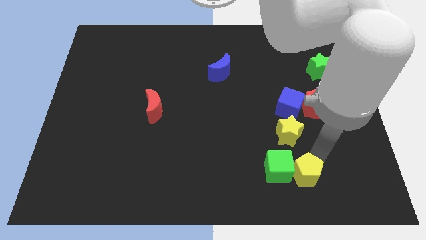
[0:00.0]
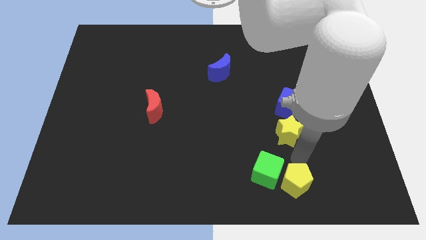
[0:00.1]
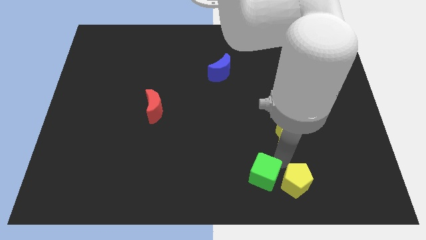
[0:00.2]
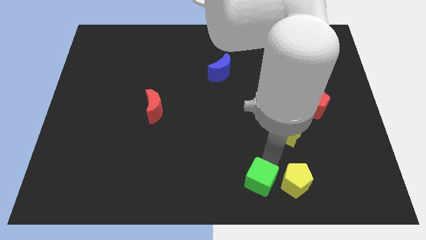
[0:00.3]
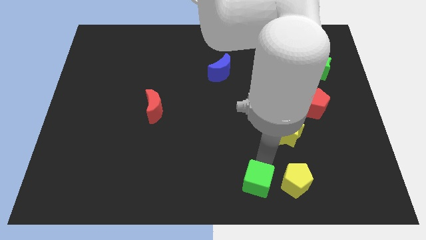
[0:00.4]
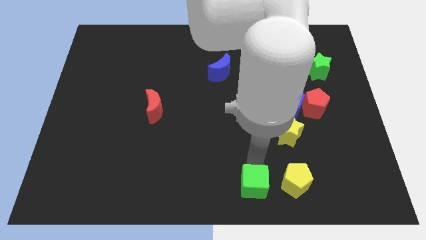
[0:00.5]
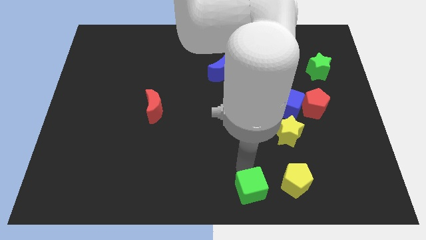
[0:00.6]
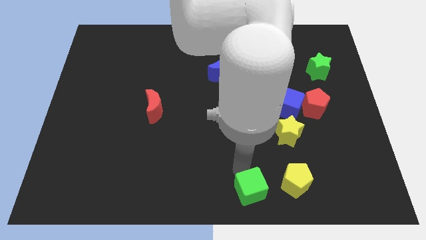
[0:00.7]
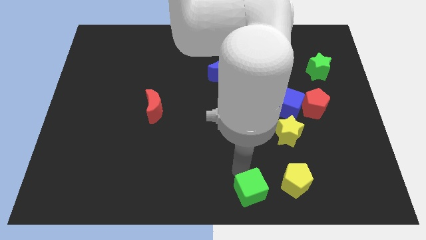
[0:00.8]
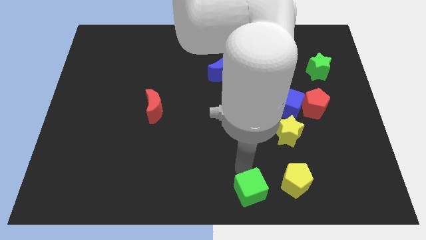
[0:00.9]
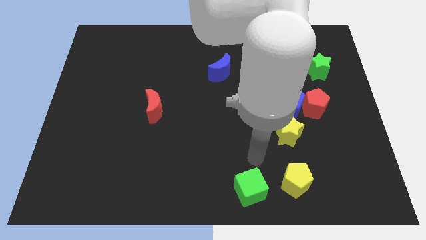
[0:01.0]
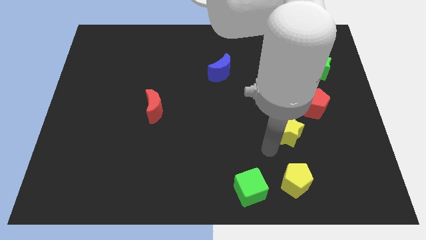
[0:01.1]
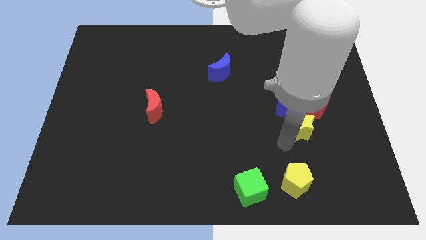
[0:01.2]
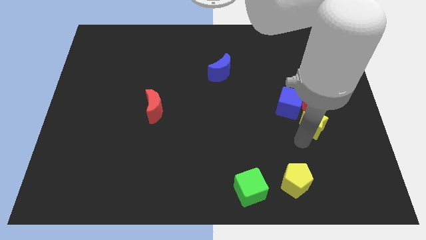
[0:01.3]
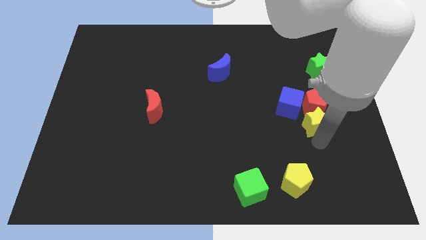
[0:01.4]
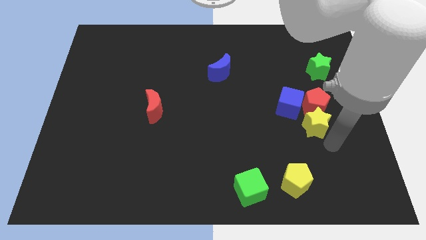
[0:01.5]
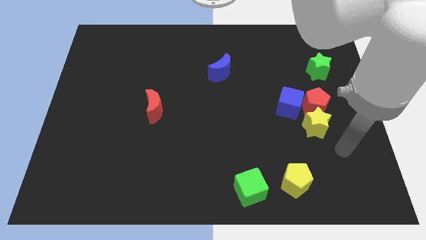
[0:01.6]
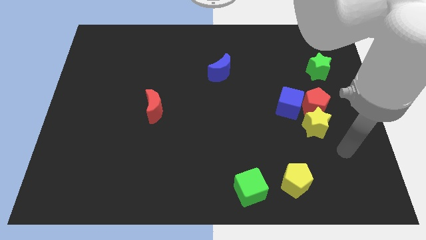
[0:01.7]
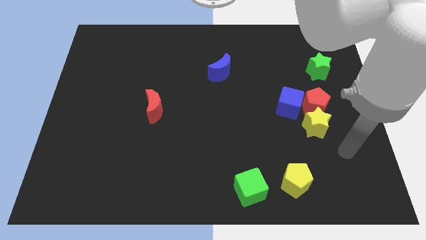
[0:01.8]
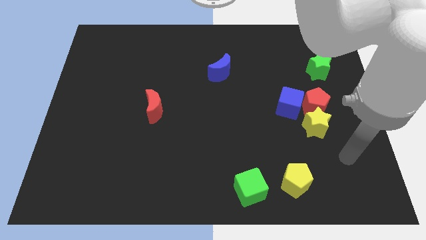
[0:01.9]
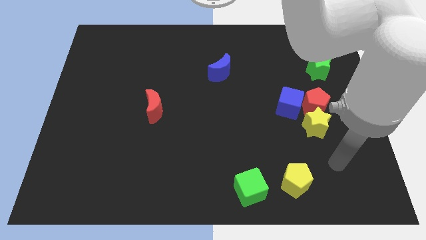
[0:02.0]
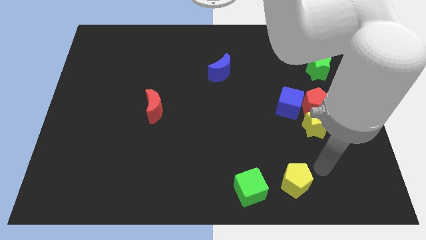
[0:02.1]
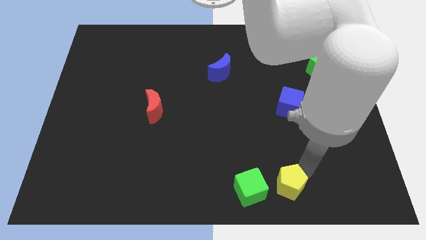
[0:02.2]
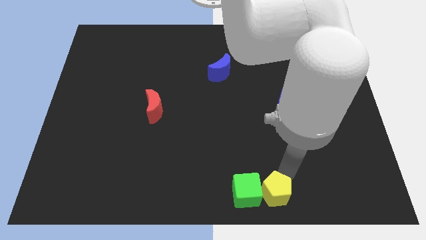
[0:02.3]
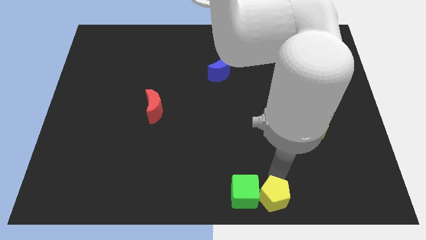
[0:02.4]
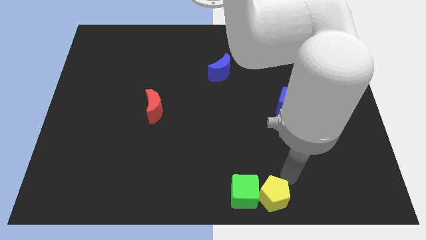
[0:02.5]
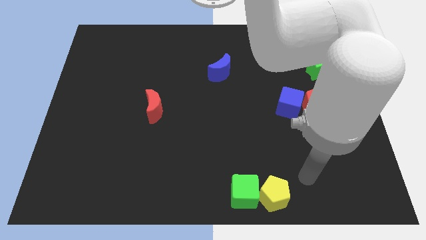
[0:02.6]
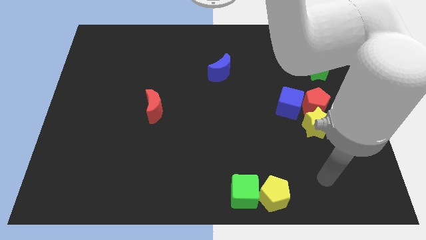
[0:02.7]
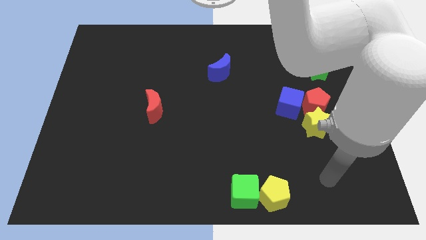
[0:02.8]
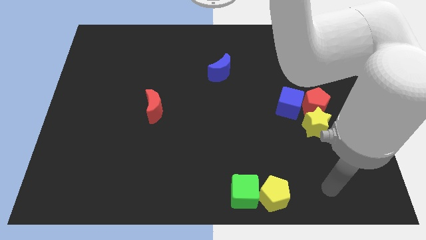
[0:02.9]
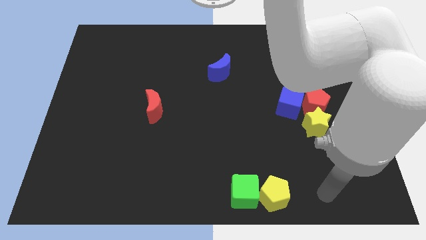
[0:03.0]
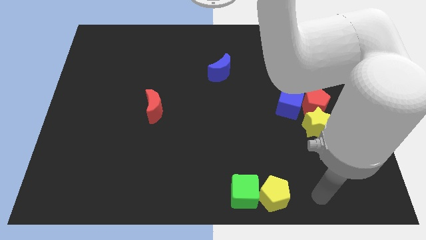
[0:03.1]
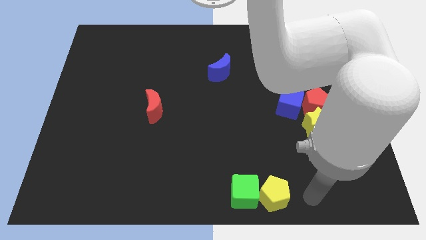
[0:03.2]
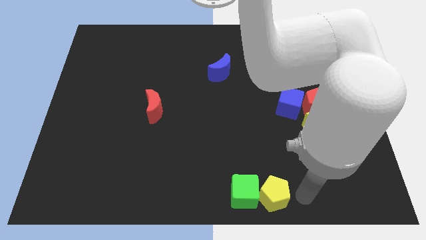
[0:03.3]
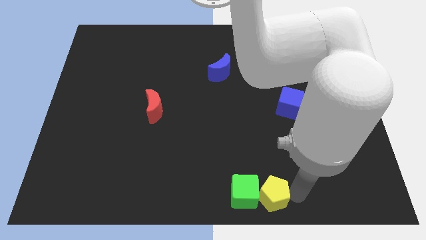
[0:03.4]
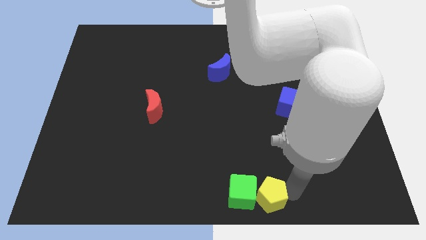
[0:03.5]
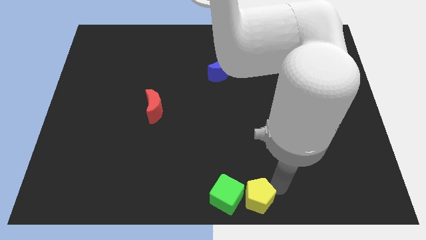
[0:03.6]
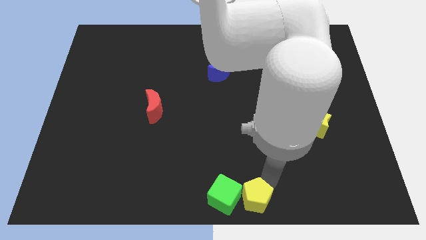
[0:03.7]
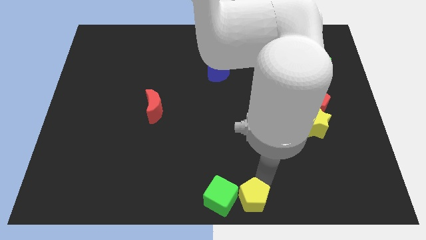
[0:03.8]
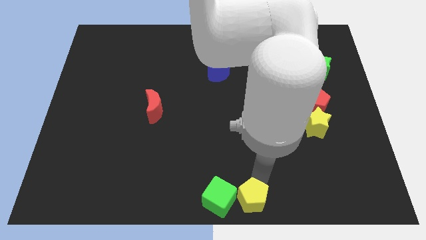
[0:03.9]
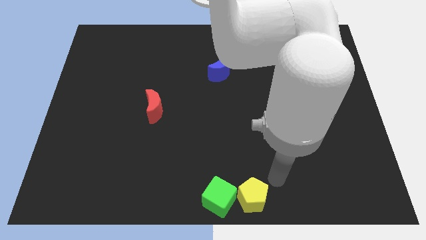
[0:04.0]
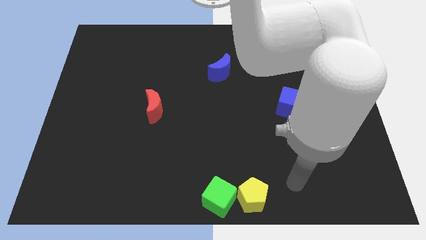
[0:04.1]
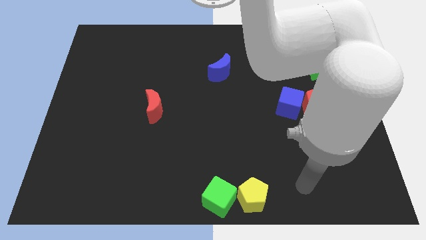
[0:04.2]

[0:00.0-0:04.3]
place the green cube along with yellow pentagon at bottom center of the board

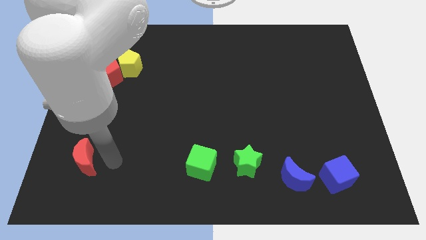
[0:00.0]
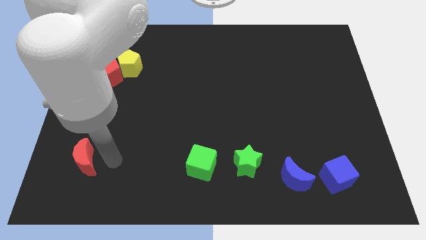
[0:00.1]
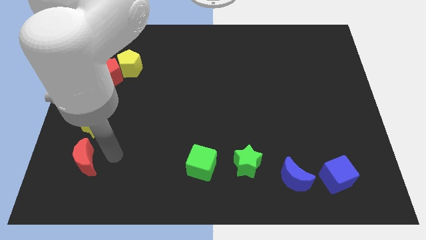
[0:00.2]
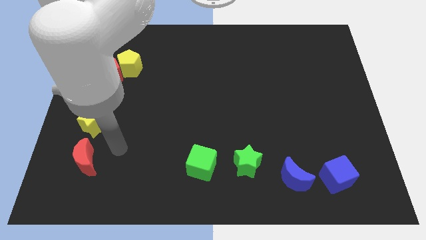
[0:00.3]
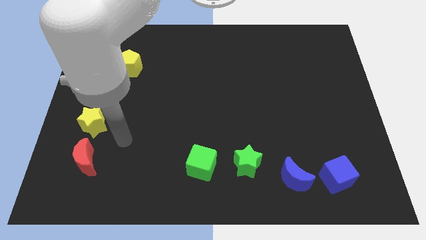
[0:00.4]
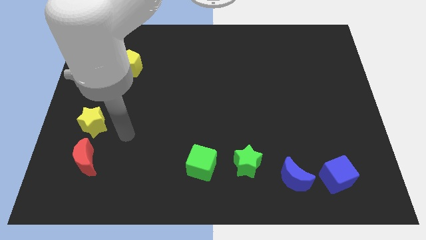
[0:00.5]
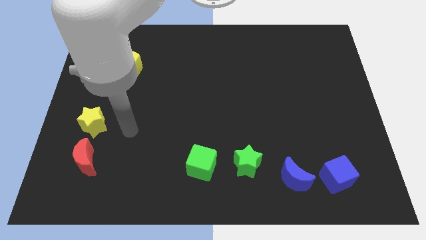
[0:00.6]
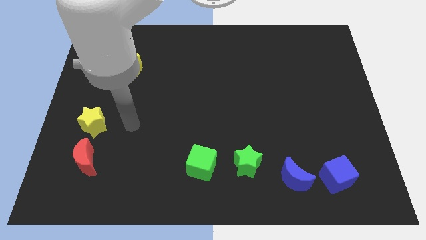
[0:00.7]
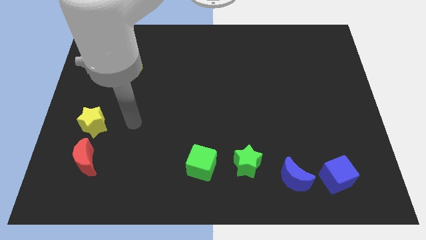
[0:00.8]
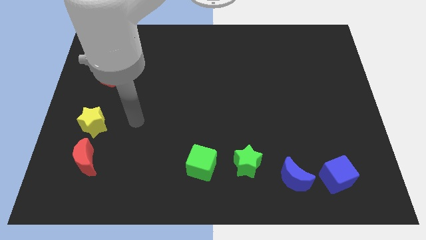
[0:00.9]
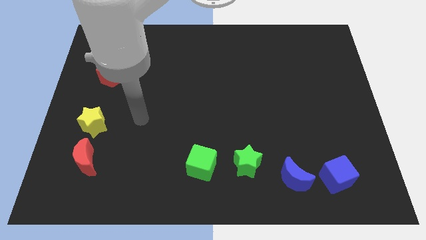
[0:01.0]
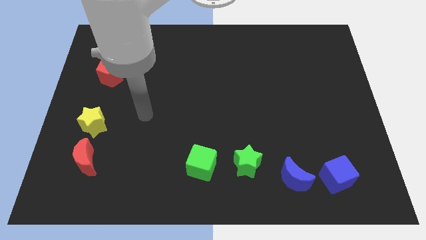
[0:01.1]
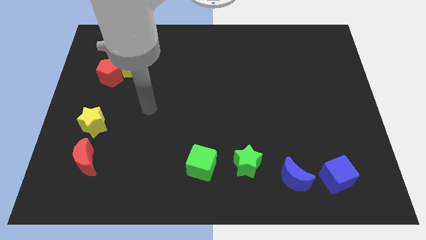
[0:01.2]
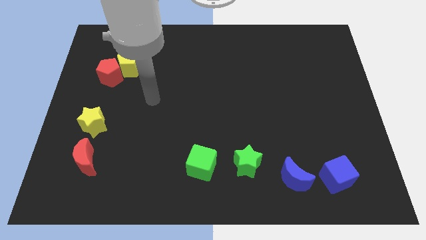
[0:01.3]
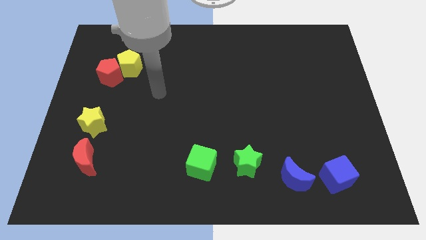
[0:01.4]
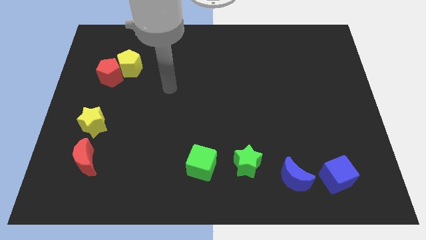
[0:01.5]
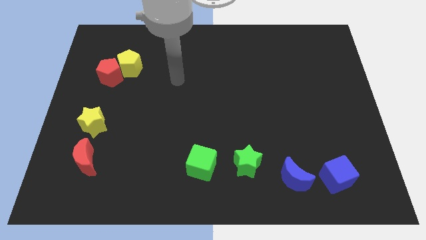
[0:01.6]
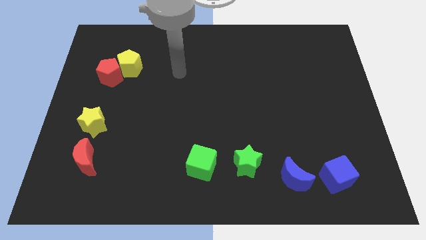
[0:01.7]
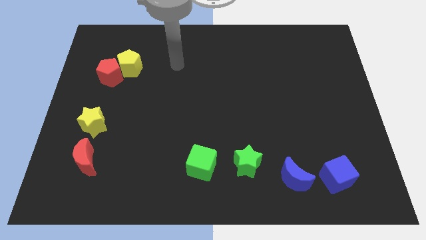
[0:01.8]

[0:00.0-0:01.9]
push arm to the top center of the board

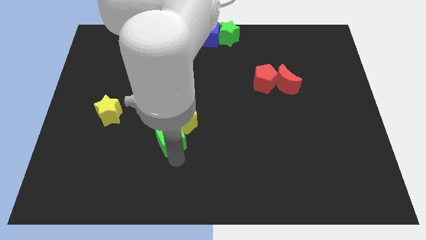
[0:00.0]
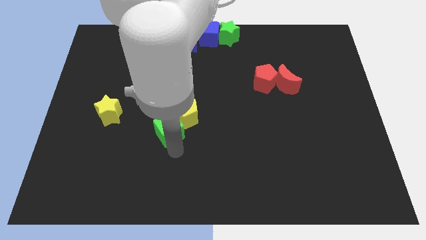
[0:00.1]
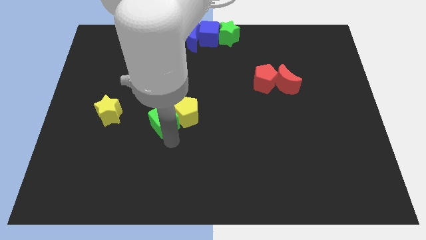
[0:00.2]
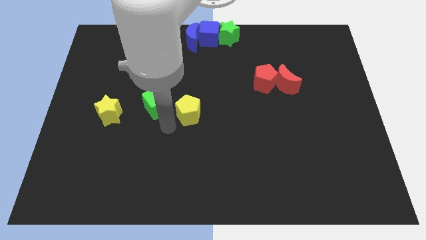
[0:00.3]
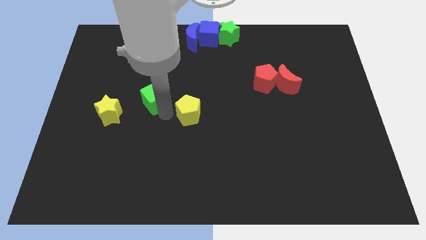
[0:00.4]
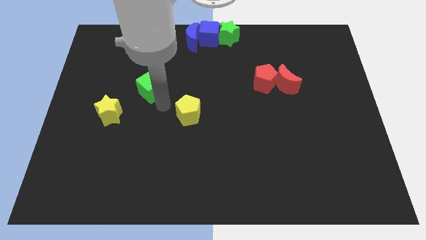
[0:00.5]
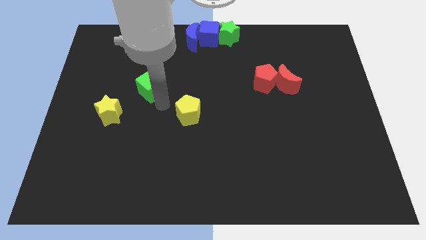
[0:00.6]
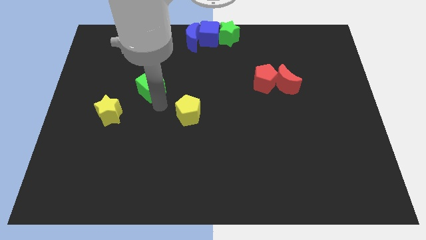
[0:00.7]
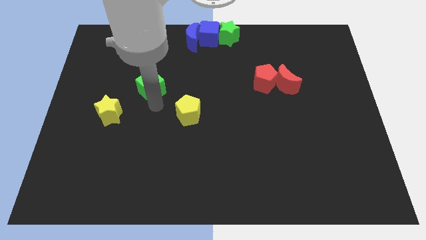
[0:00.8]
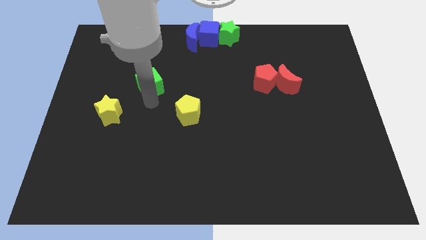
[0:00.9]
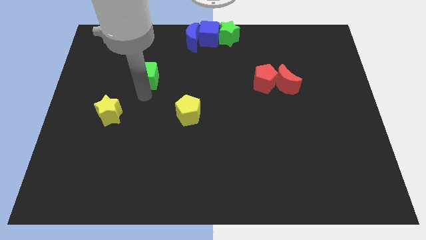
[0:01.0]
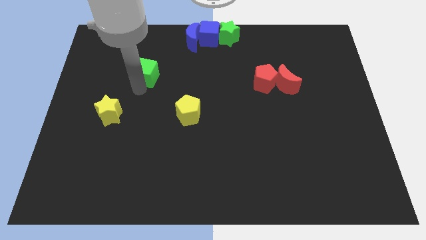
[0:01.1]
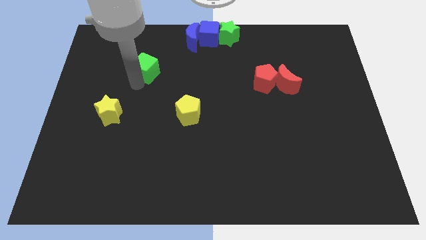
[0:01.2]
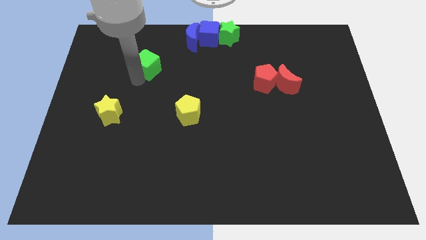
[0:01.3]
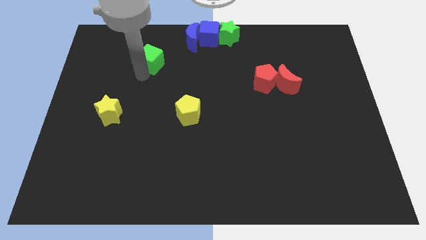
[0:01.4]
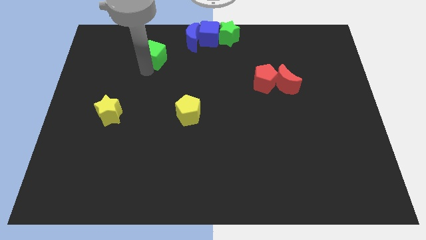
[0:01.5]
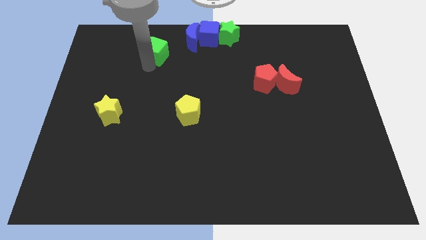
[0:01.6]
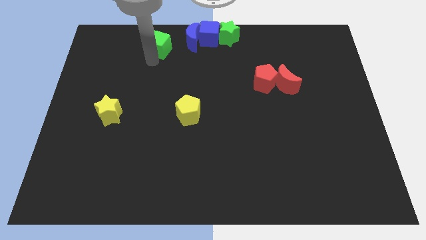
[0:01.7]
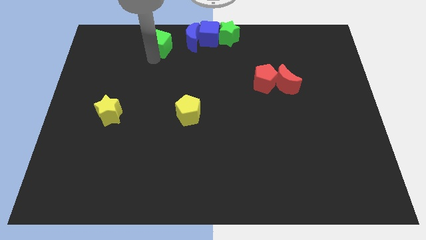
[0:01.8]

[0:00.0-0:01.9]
separate the green cube and yellow pentagon

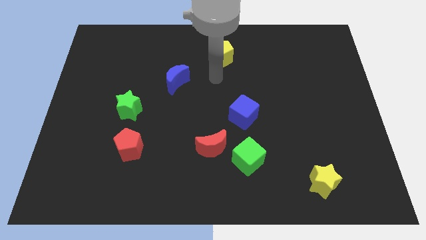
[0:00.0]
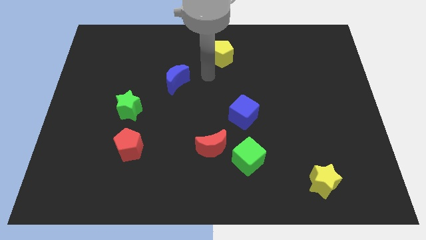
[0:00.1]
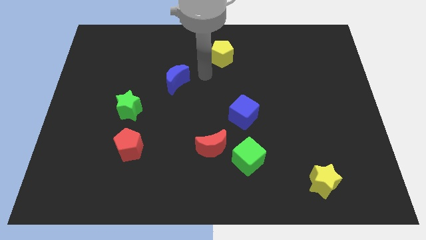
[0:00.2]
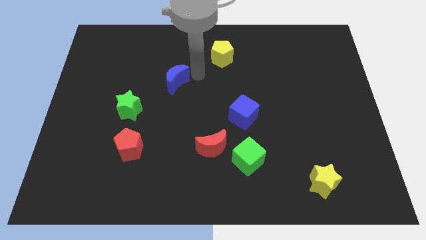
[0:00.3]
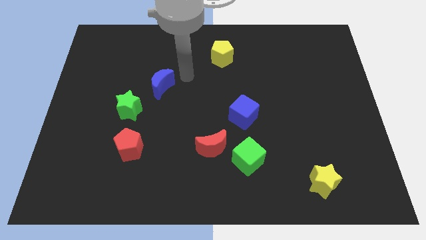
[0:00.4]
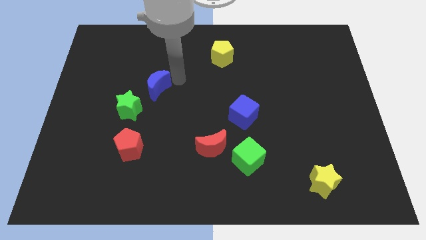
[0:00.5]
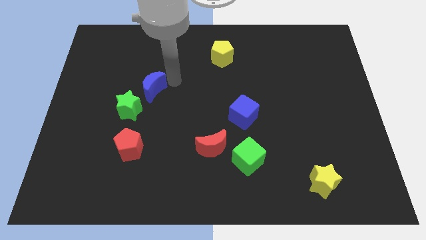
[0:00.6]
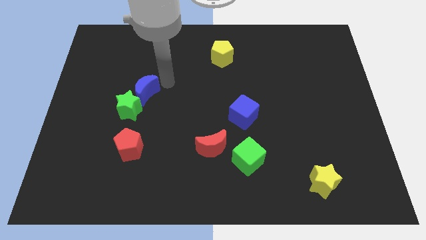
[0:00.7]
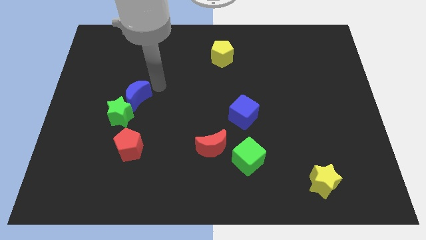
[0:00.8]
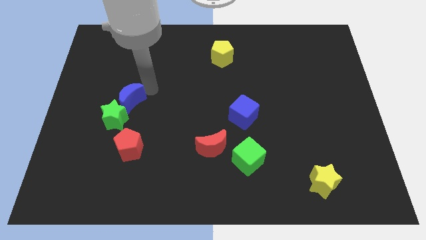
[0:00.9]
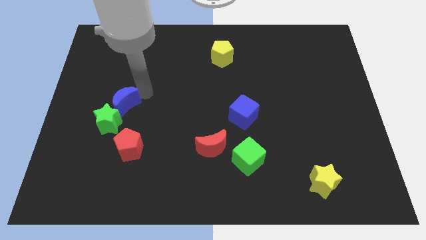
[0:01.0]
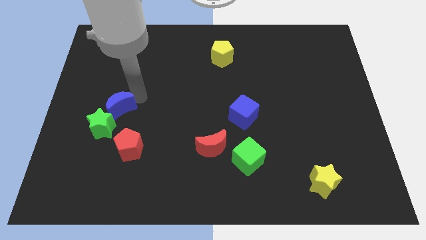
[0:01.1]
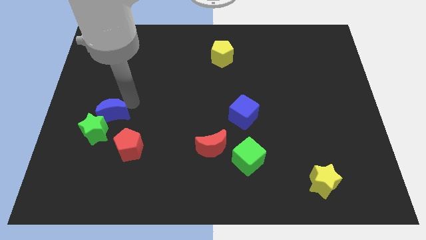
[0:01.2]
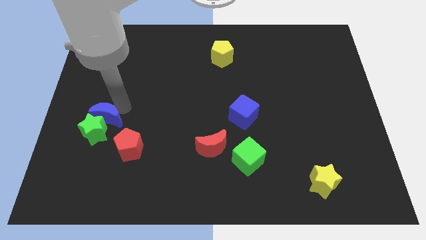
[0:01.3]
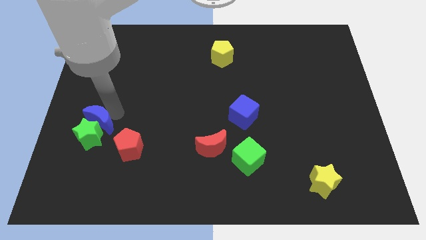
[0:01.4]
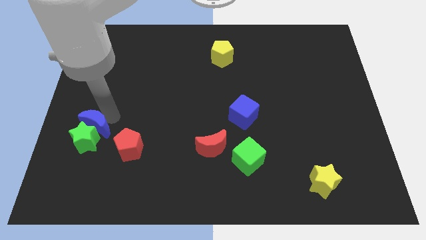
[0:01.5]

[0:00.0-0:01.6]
push the blue moon into the green star
